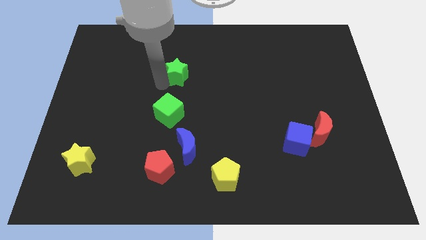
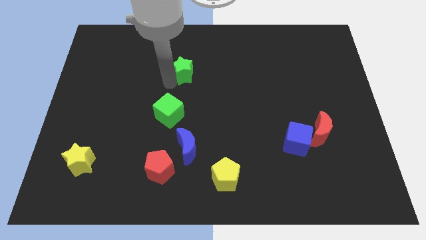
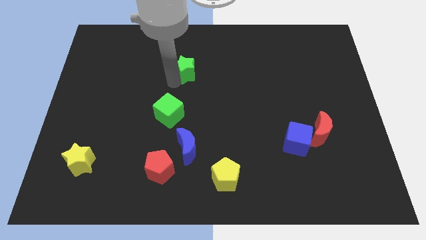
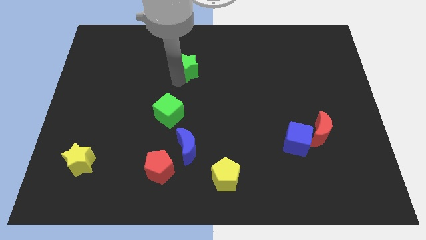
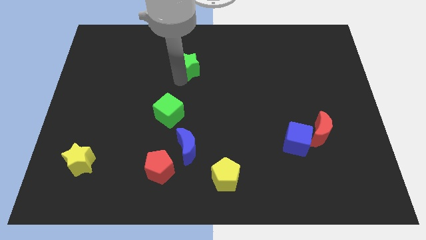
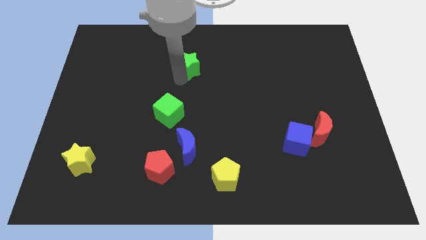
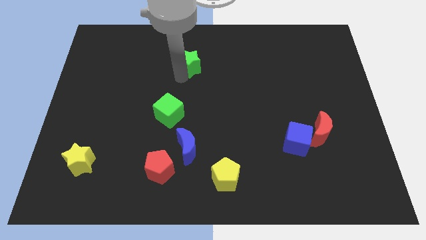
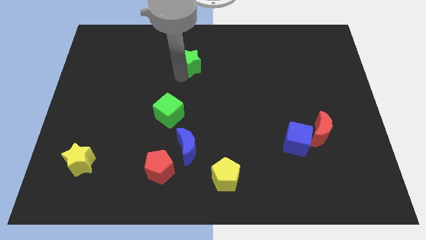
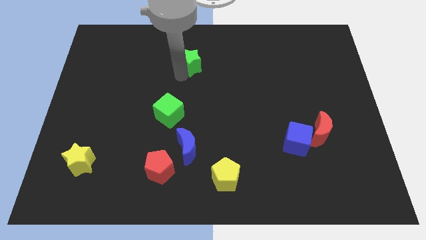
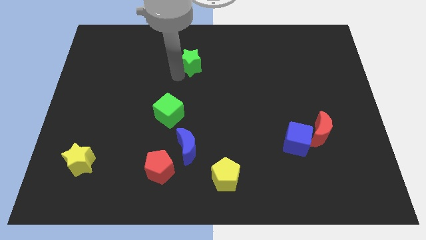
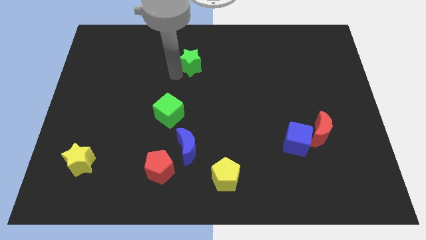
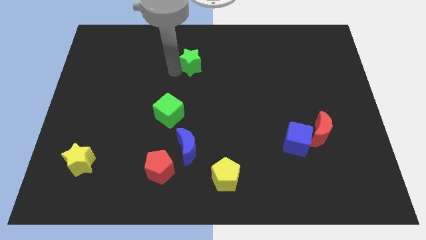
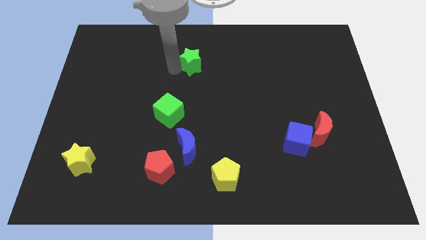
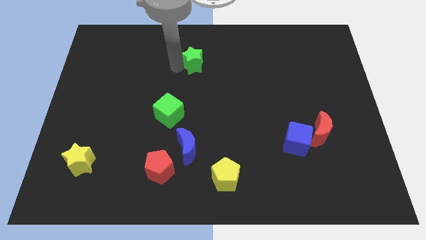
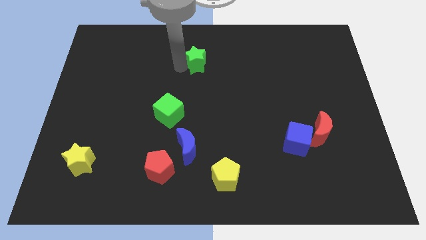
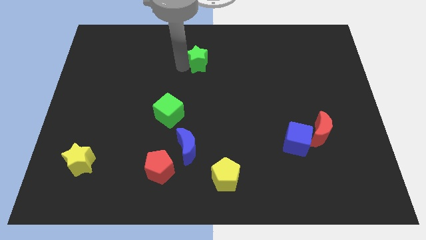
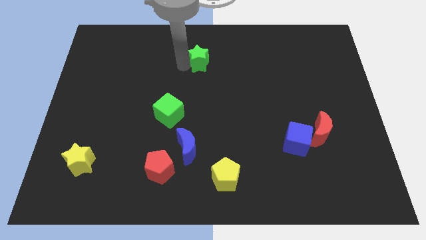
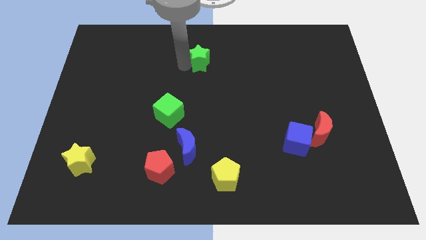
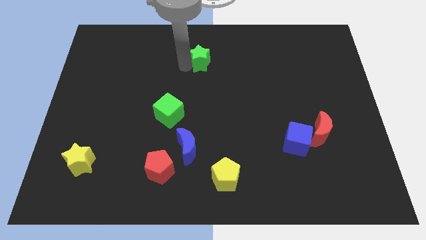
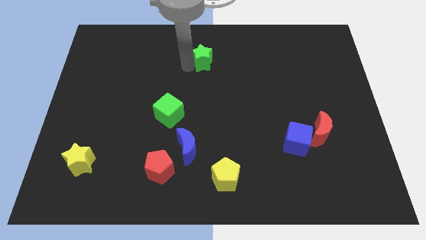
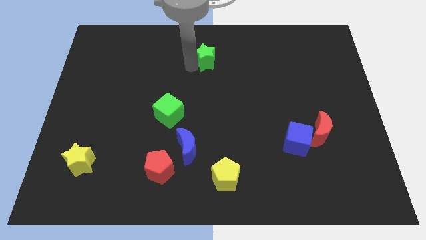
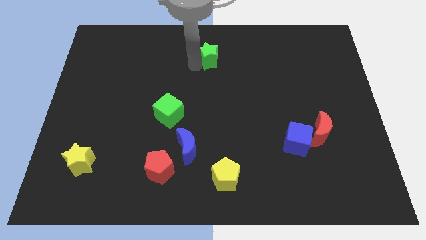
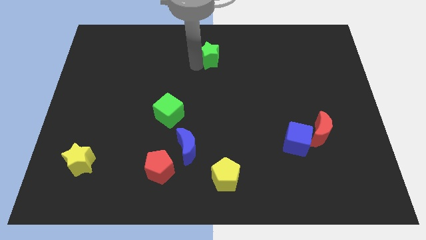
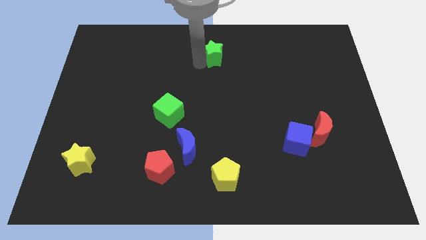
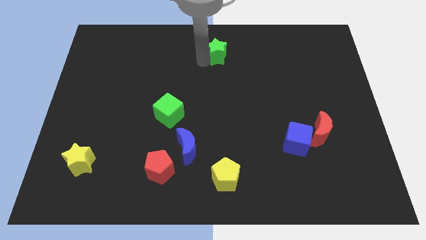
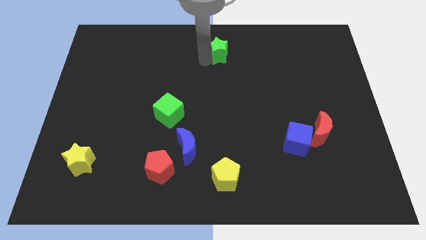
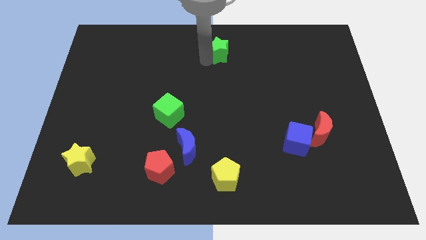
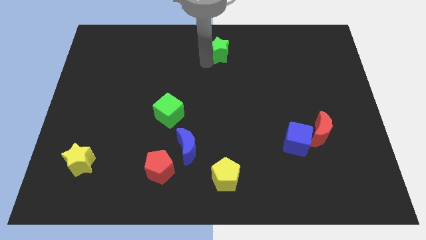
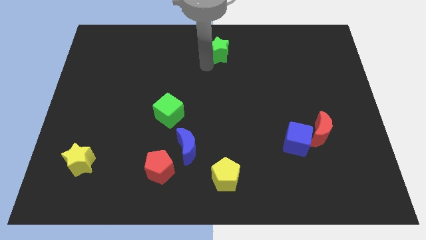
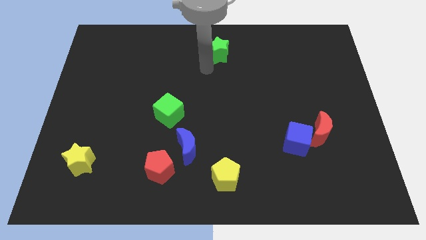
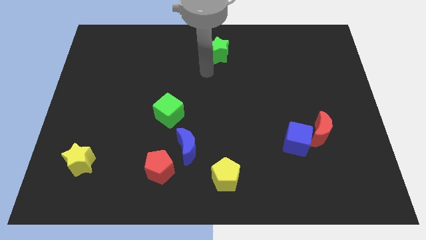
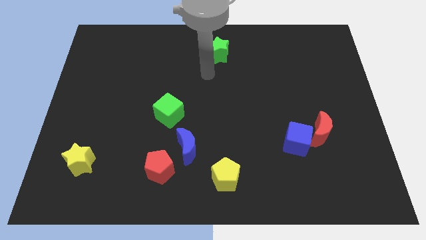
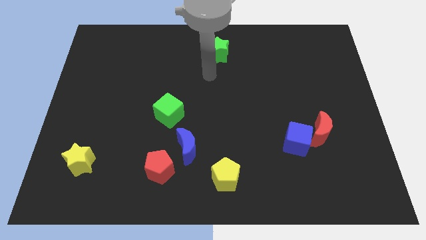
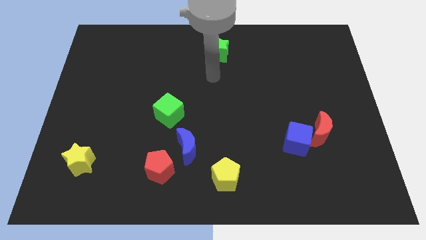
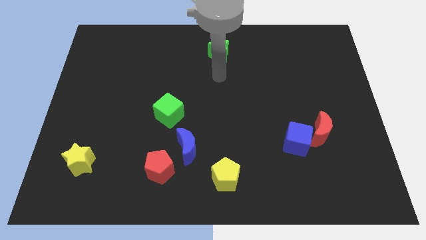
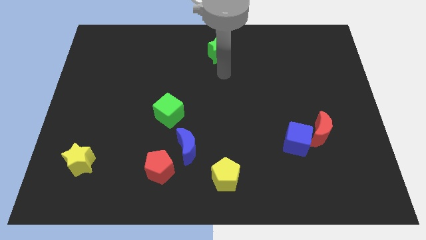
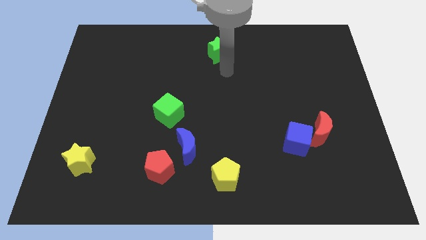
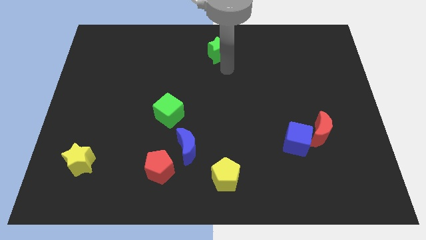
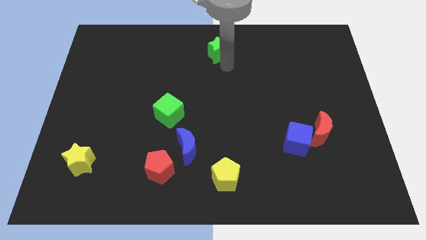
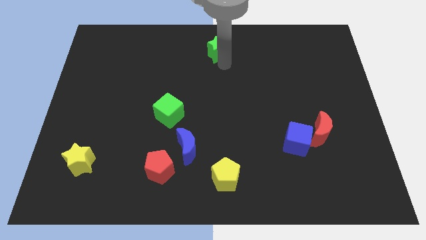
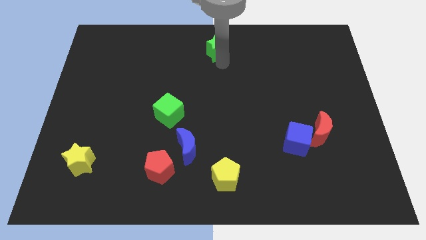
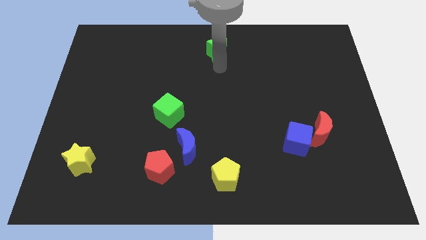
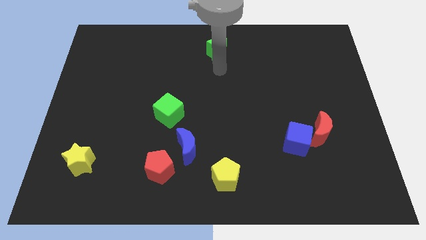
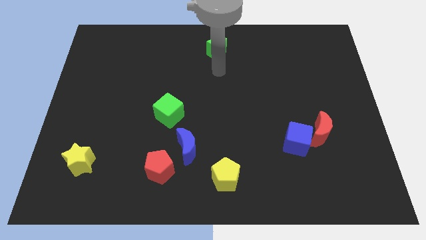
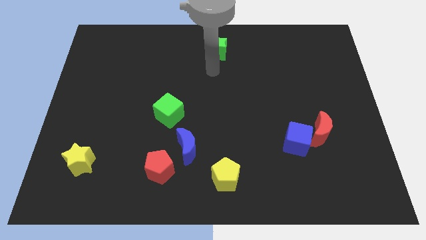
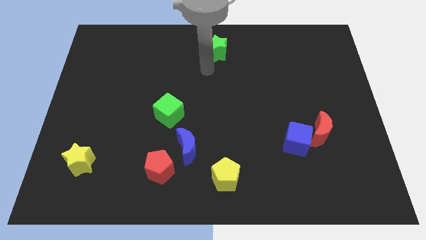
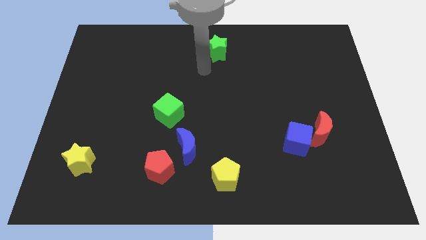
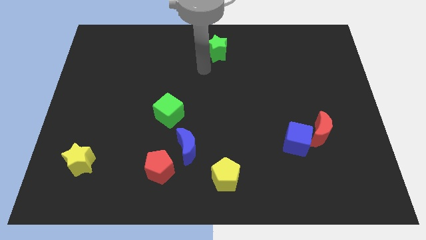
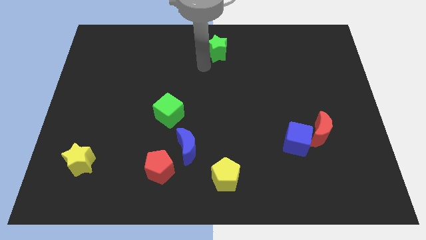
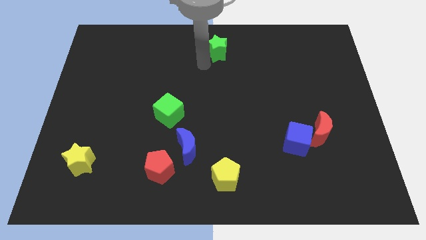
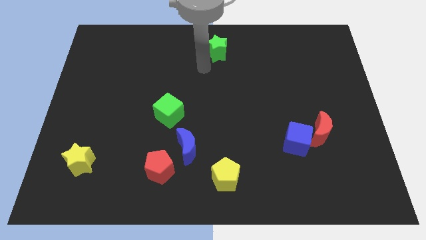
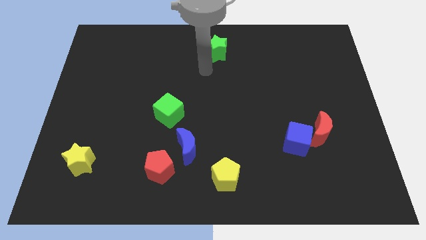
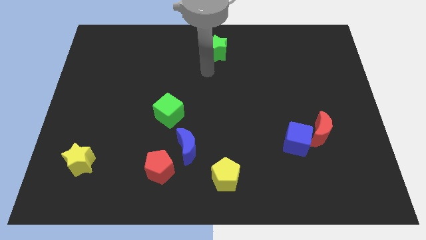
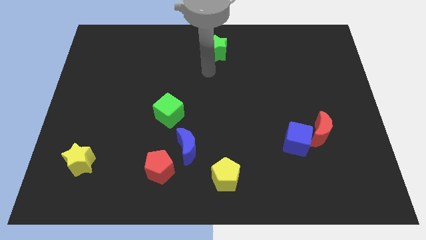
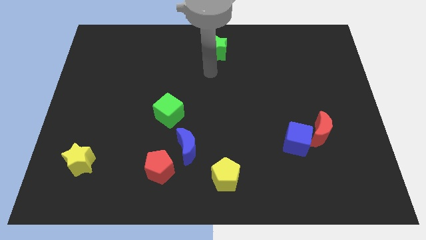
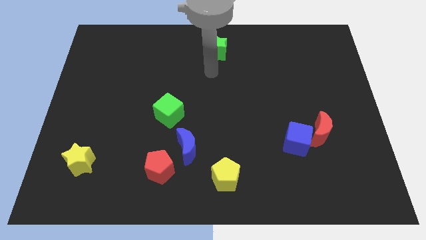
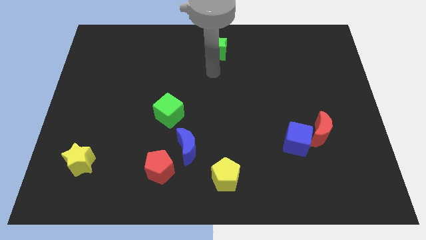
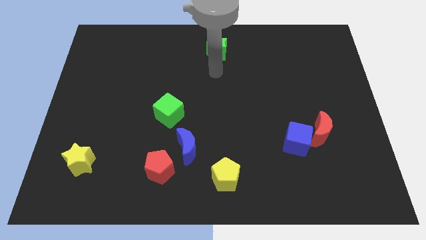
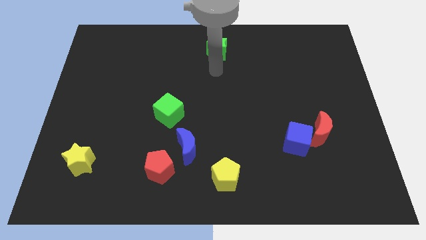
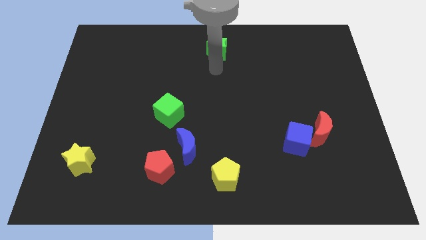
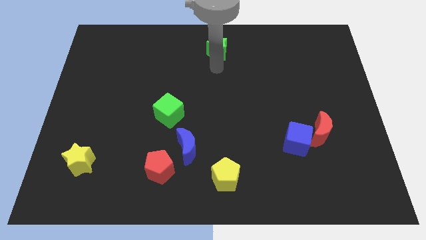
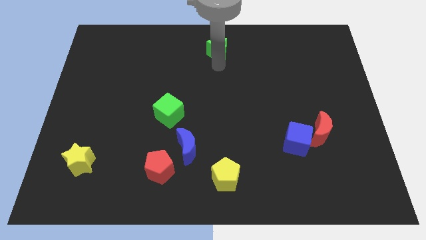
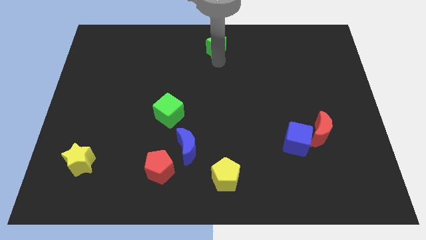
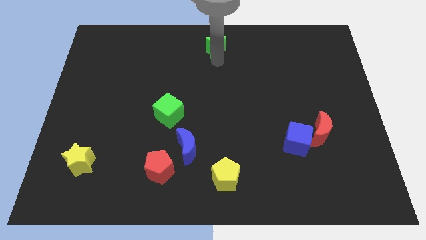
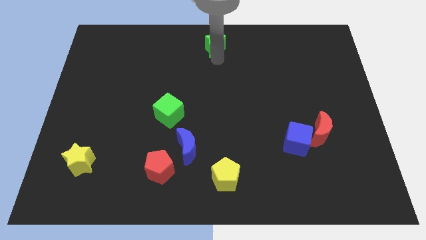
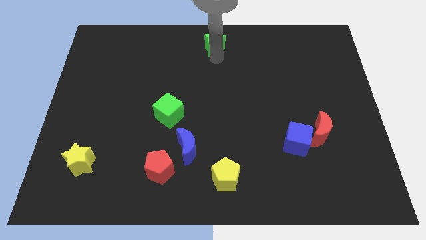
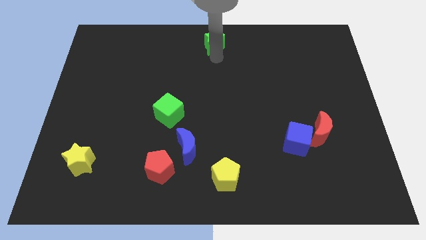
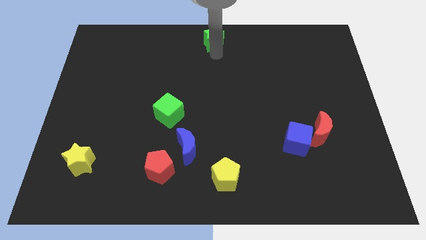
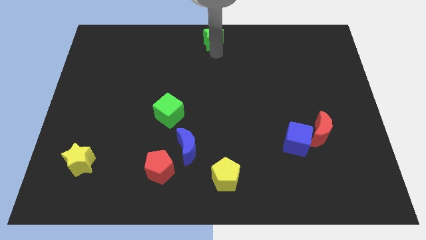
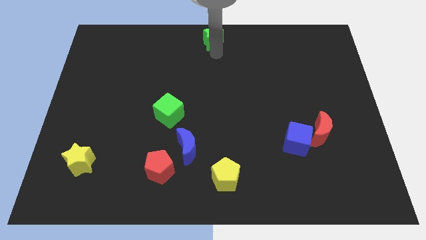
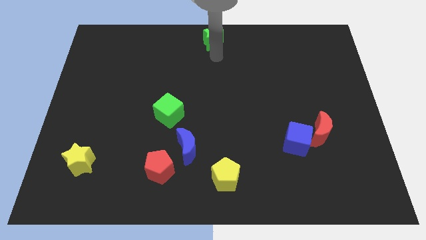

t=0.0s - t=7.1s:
place the green star at the top center

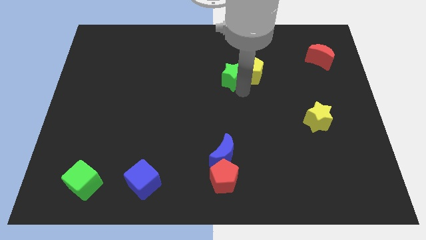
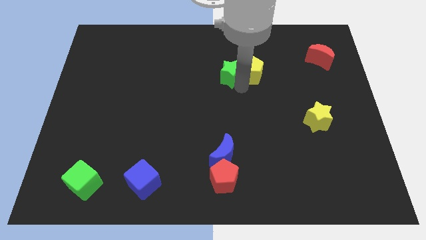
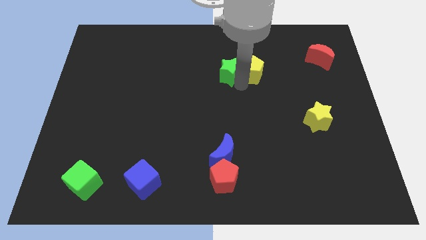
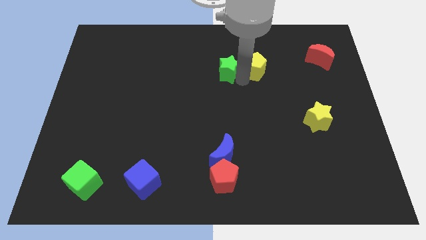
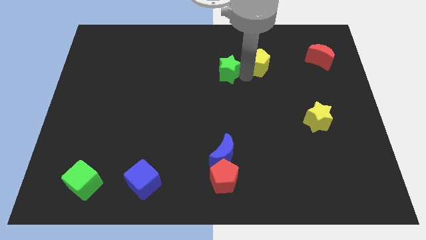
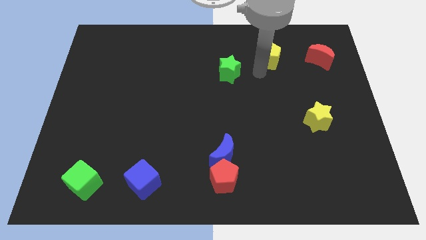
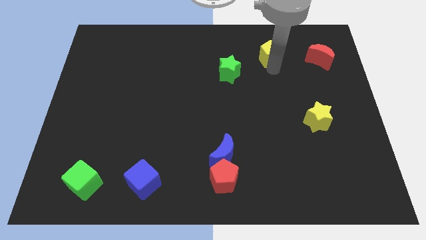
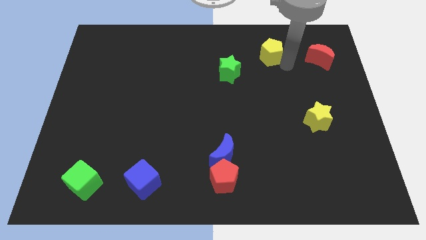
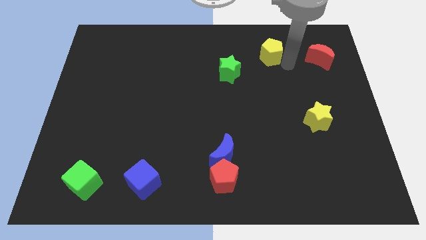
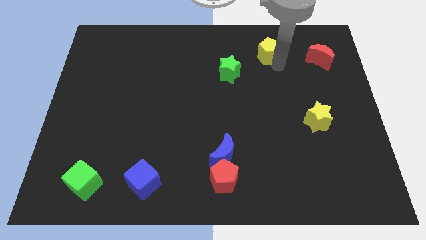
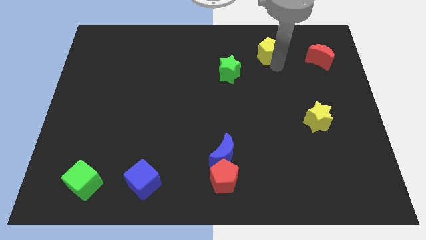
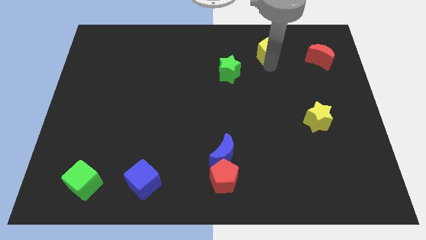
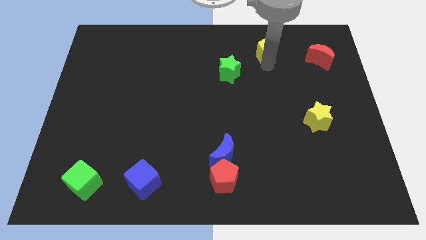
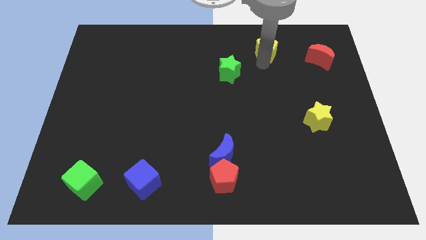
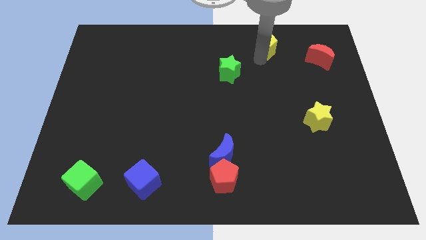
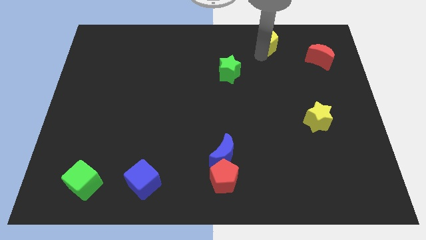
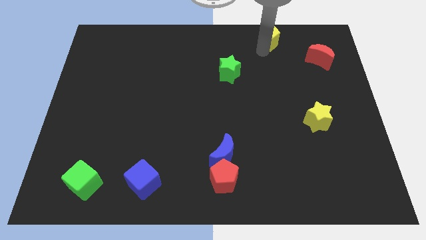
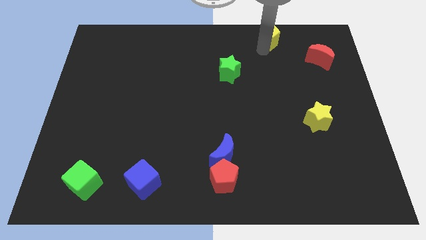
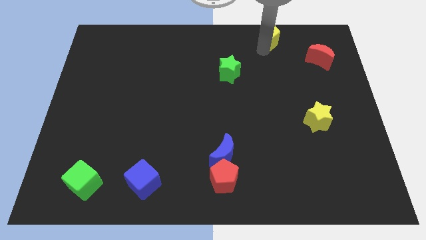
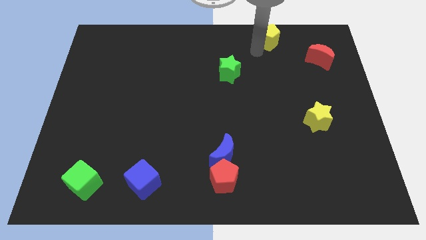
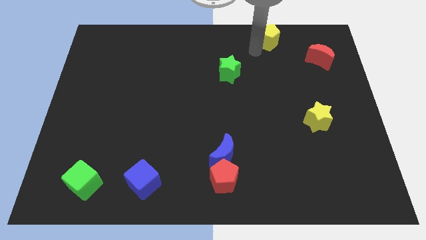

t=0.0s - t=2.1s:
move the yellow pentagon to top right side of the board
